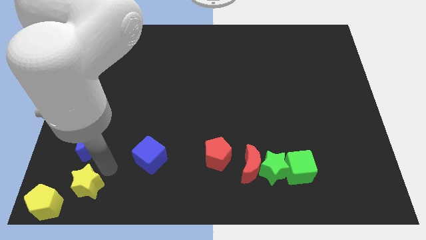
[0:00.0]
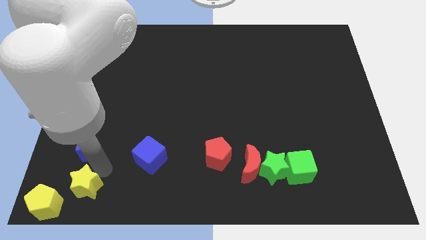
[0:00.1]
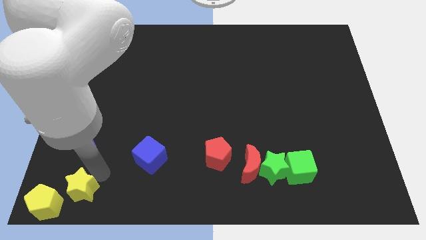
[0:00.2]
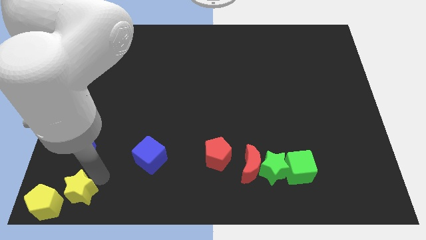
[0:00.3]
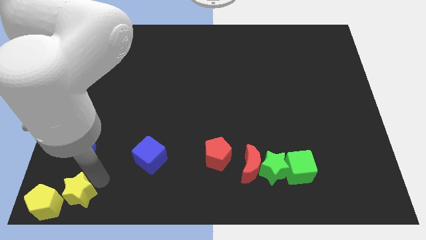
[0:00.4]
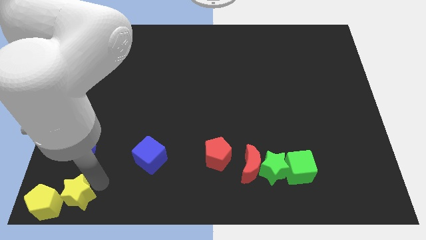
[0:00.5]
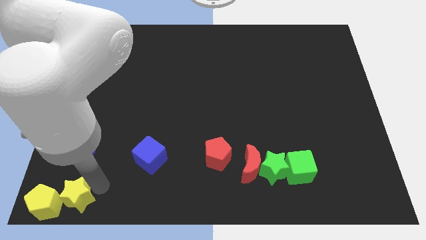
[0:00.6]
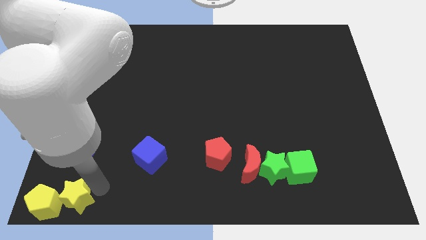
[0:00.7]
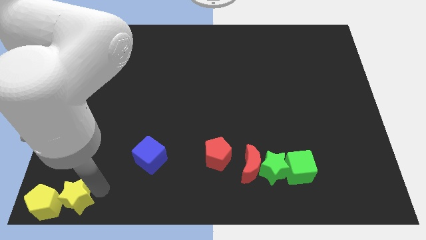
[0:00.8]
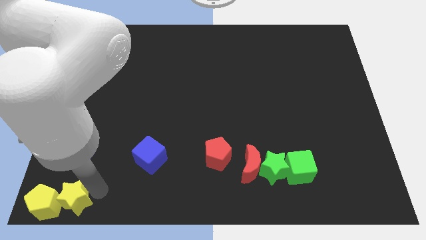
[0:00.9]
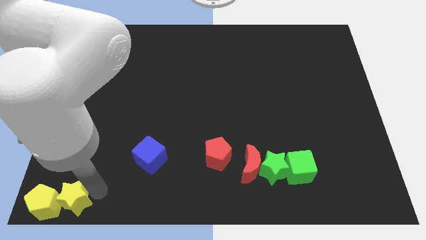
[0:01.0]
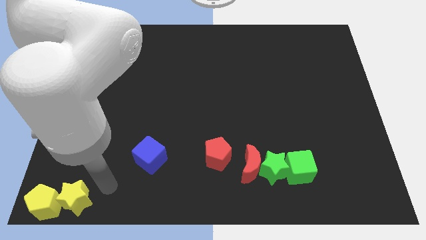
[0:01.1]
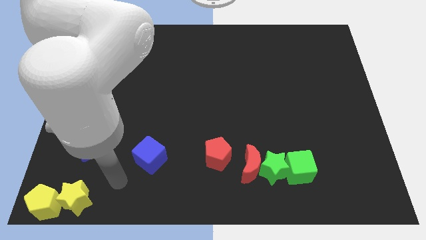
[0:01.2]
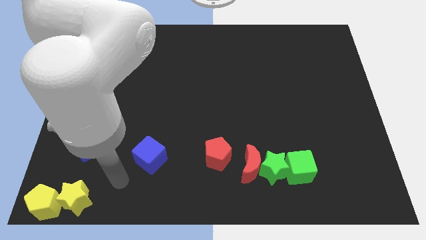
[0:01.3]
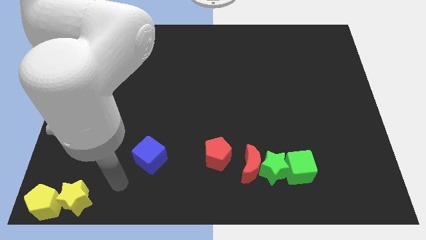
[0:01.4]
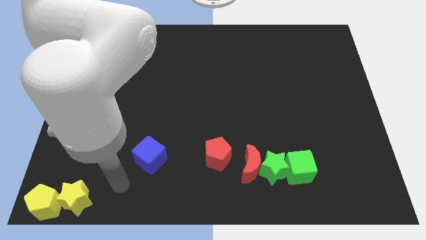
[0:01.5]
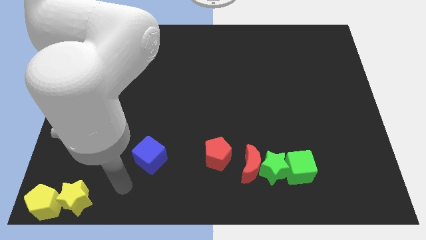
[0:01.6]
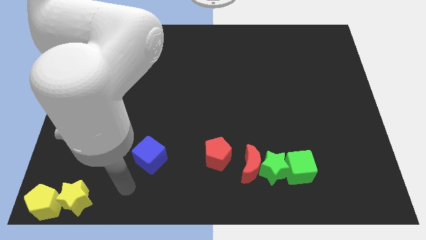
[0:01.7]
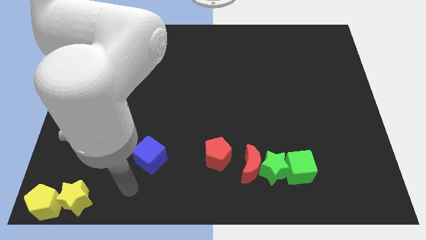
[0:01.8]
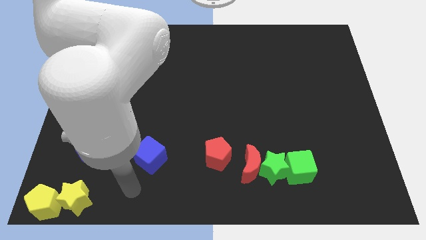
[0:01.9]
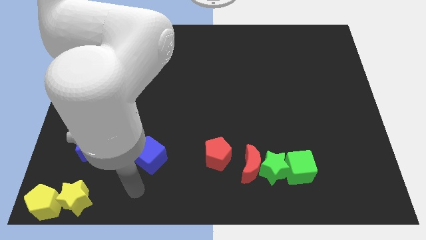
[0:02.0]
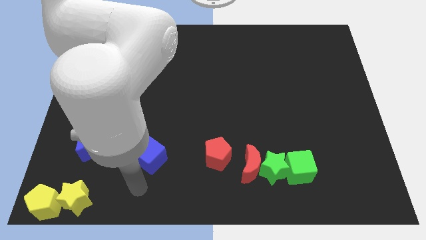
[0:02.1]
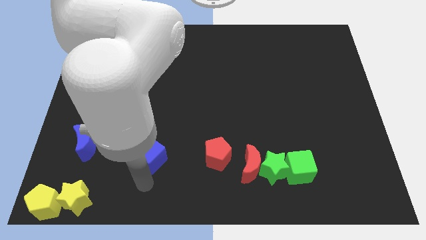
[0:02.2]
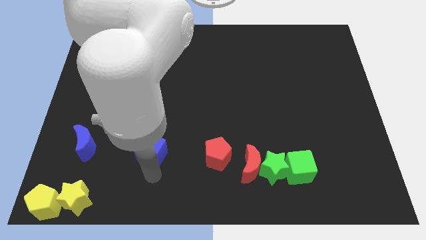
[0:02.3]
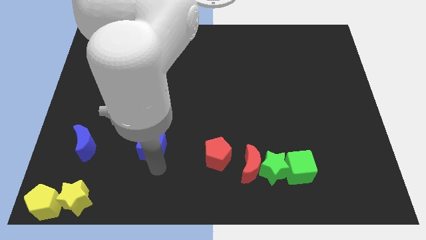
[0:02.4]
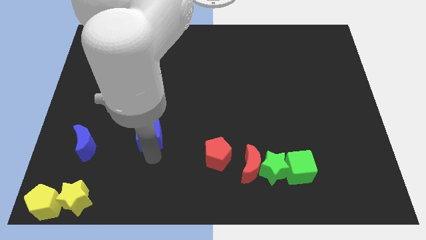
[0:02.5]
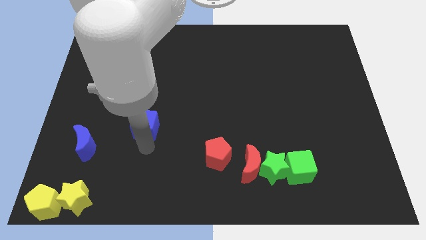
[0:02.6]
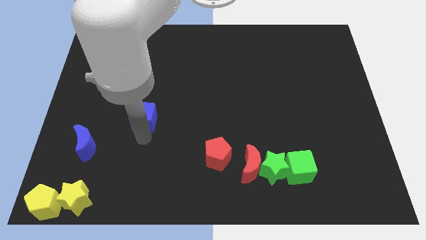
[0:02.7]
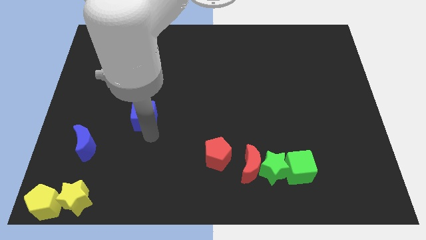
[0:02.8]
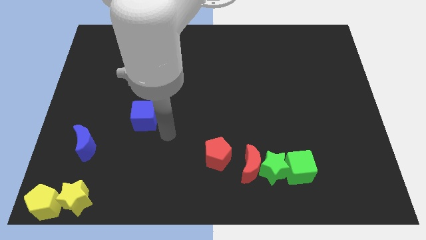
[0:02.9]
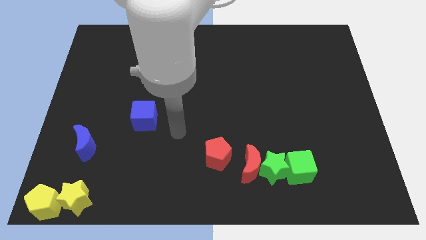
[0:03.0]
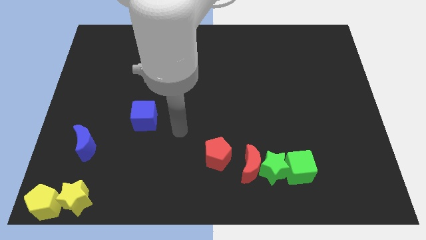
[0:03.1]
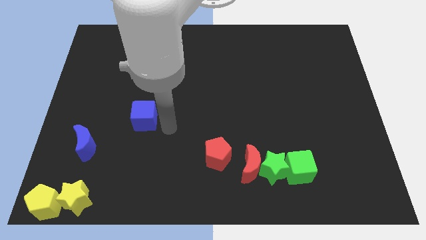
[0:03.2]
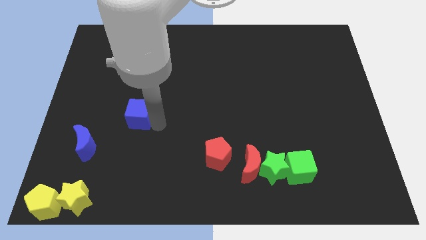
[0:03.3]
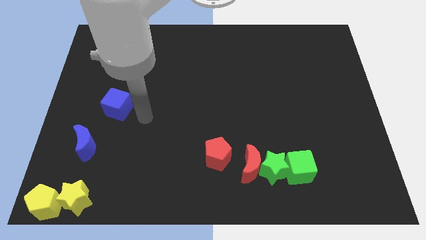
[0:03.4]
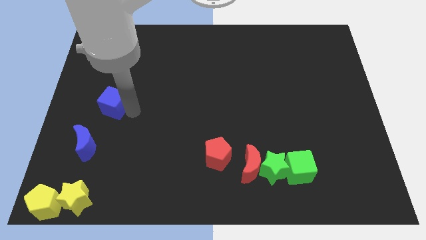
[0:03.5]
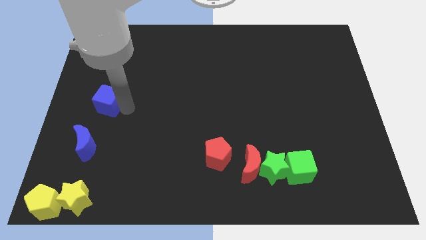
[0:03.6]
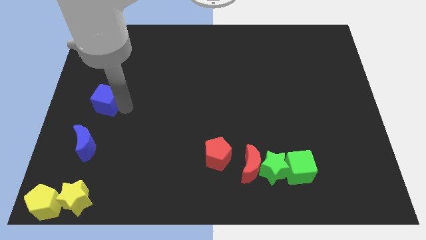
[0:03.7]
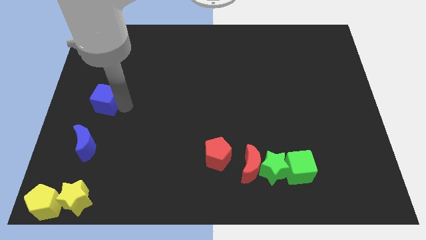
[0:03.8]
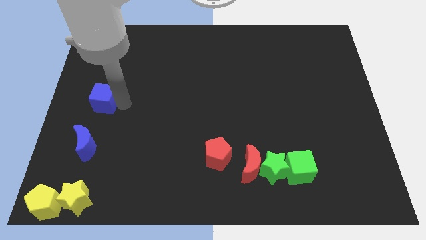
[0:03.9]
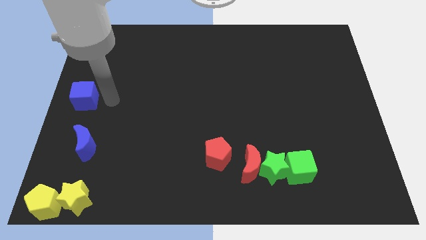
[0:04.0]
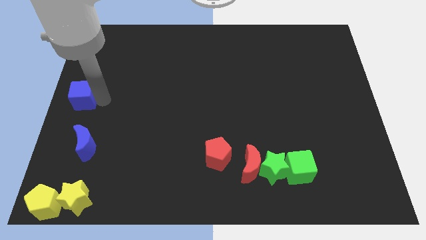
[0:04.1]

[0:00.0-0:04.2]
place the blue cube above the blue crescent

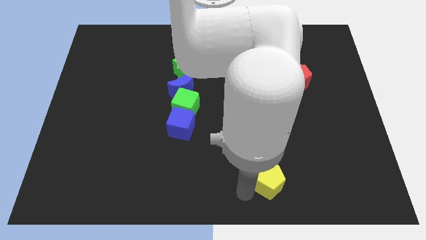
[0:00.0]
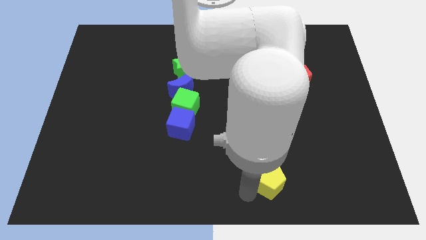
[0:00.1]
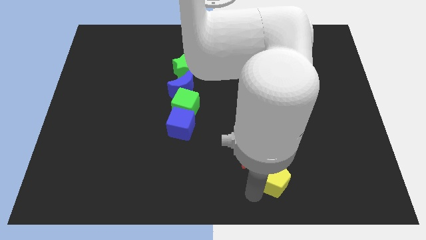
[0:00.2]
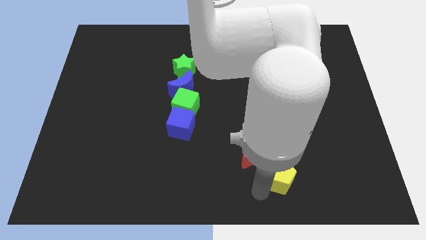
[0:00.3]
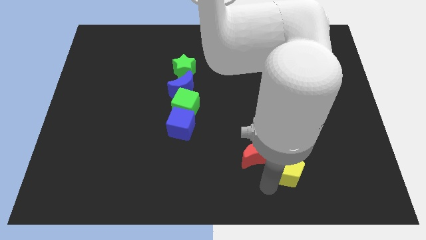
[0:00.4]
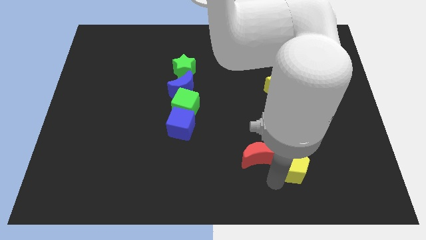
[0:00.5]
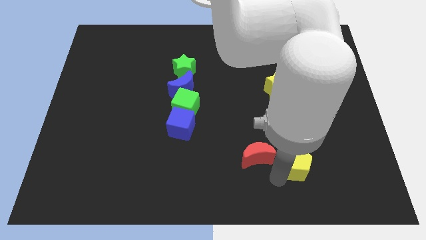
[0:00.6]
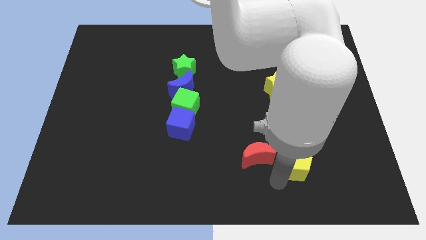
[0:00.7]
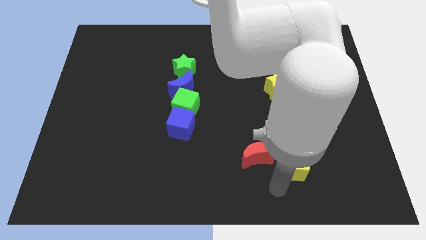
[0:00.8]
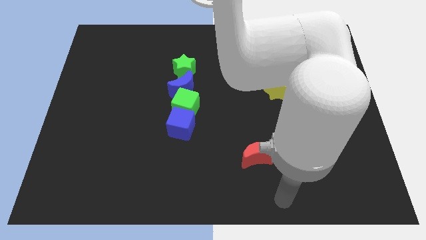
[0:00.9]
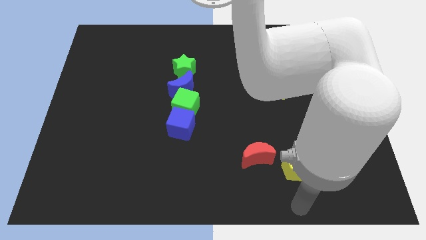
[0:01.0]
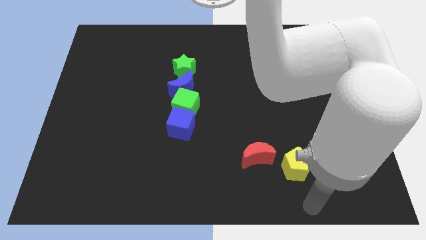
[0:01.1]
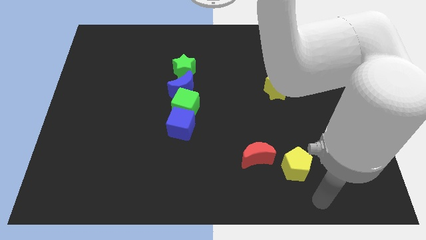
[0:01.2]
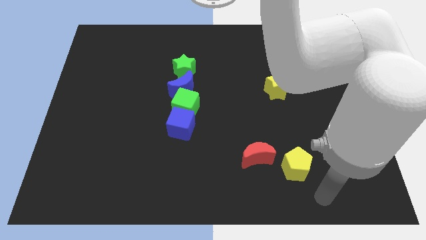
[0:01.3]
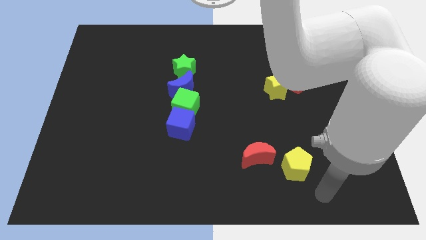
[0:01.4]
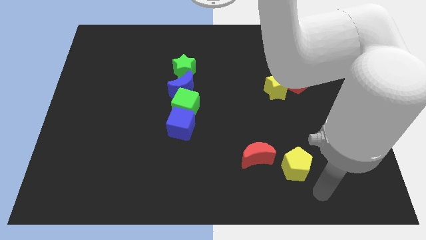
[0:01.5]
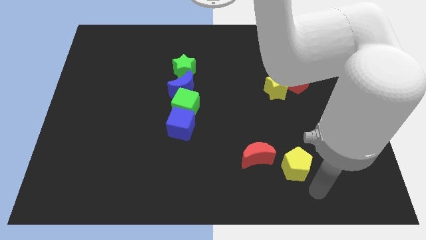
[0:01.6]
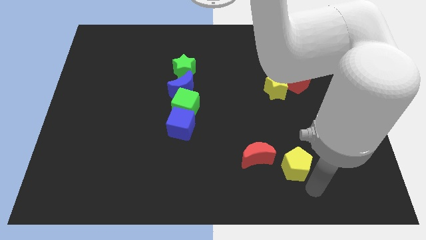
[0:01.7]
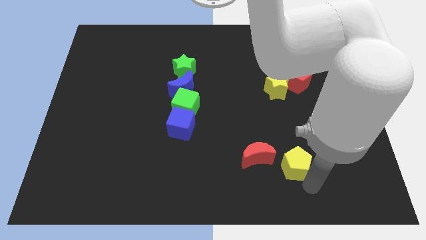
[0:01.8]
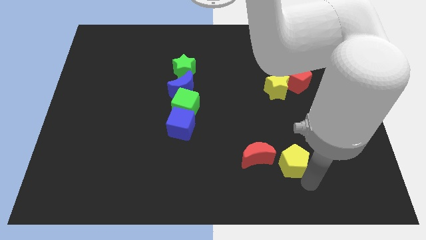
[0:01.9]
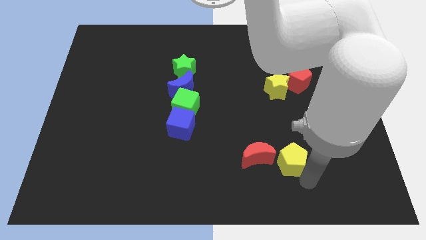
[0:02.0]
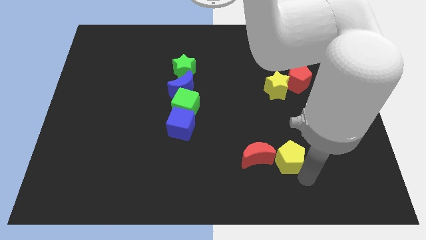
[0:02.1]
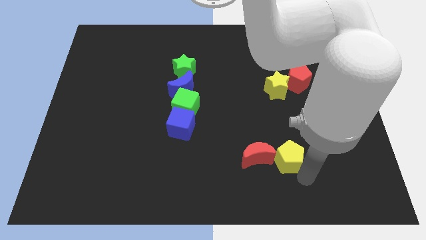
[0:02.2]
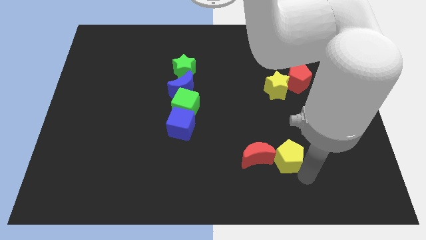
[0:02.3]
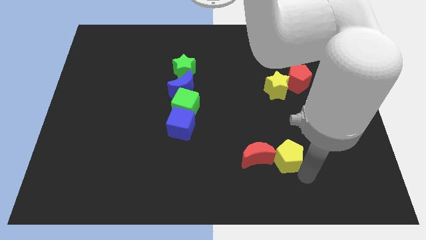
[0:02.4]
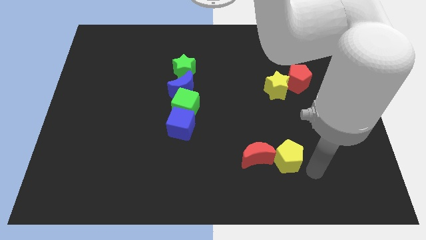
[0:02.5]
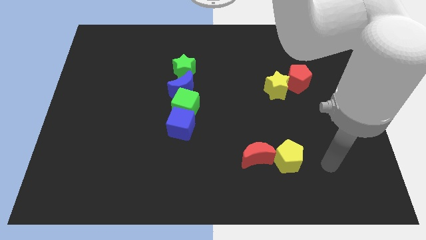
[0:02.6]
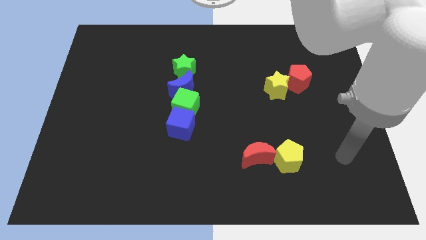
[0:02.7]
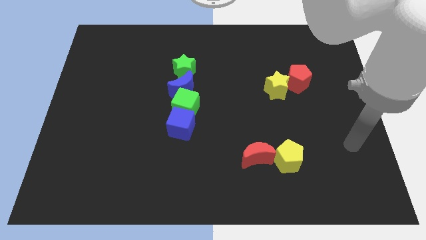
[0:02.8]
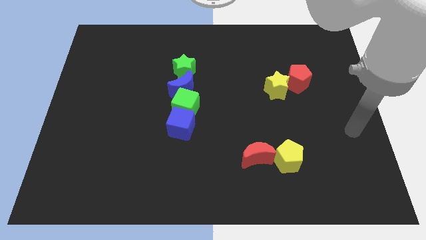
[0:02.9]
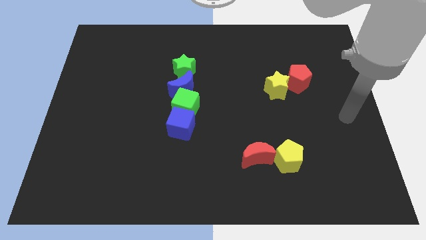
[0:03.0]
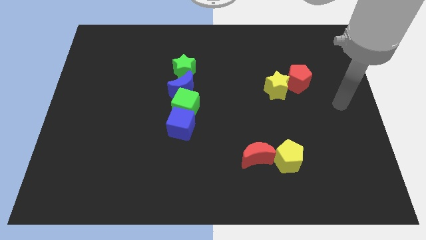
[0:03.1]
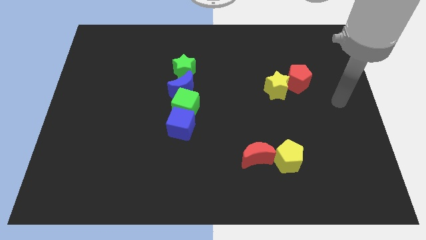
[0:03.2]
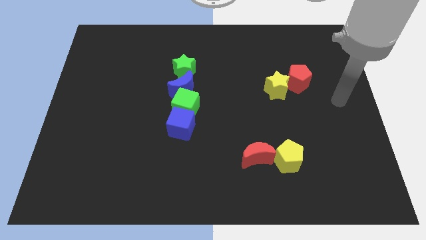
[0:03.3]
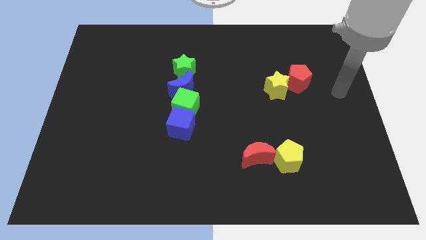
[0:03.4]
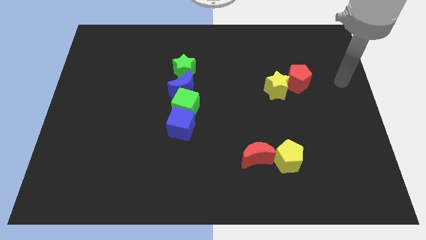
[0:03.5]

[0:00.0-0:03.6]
push the pentagon to the right of the red crescent

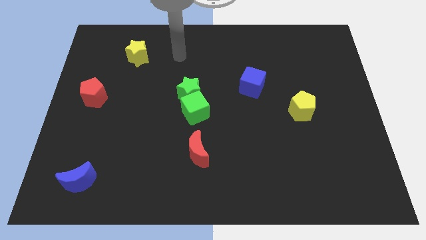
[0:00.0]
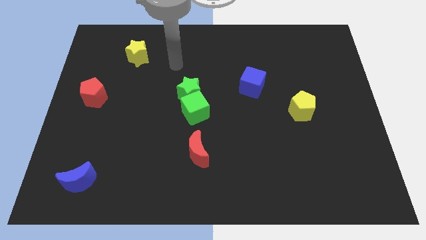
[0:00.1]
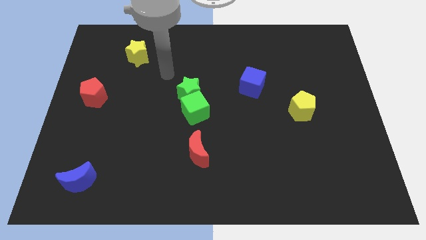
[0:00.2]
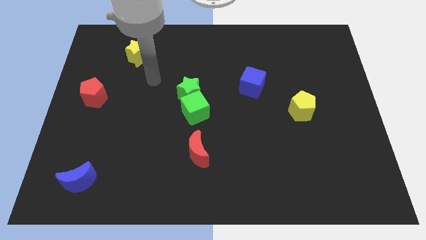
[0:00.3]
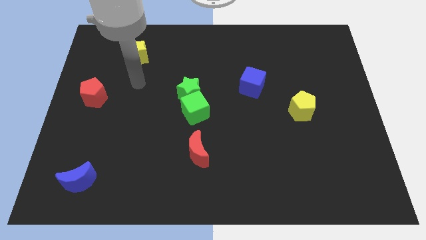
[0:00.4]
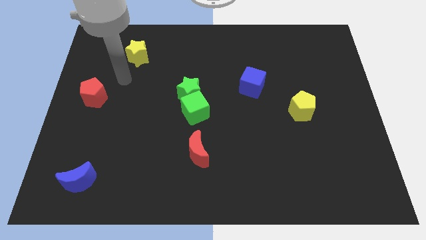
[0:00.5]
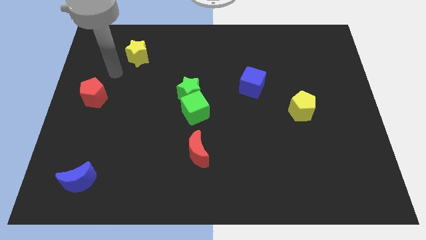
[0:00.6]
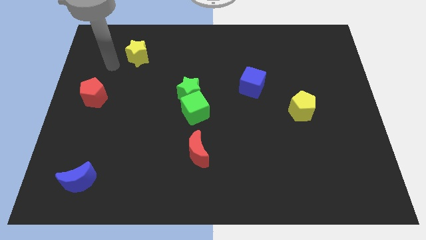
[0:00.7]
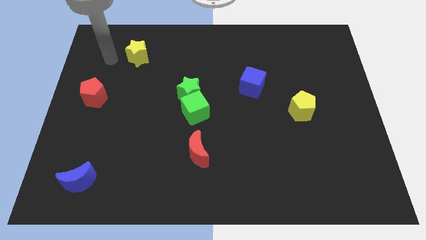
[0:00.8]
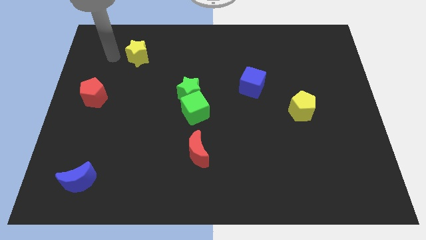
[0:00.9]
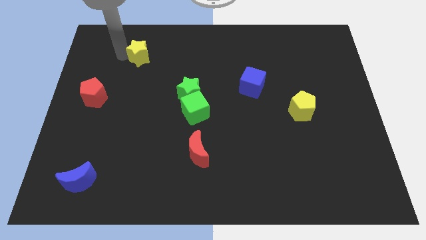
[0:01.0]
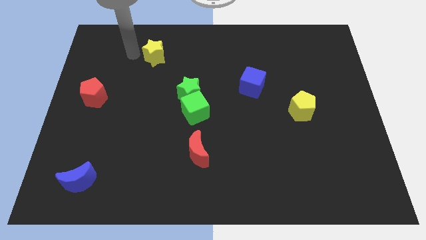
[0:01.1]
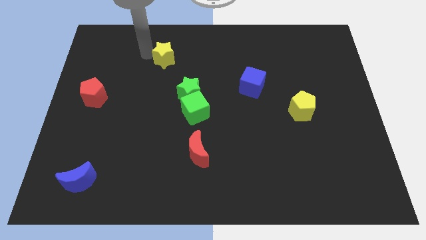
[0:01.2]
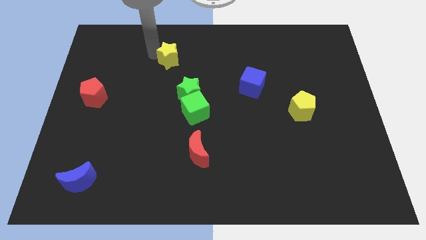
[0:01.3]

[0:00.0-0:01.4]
move the yellow star slightly to the left
